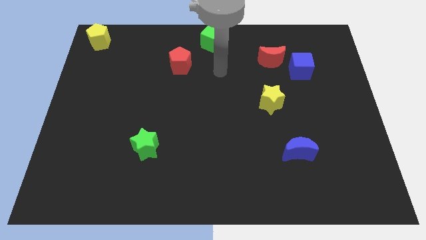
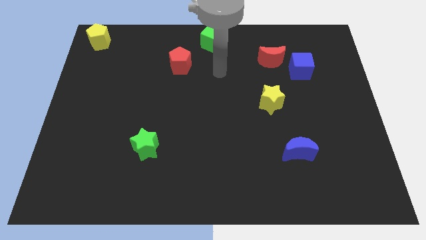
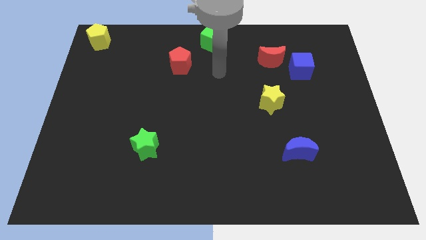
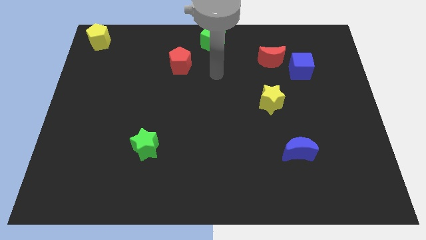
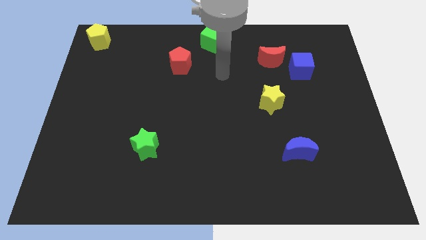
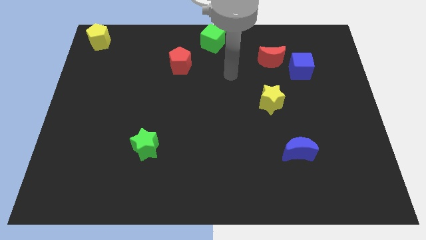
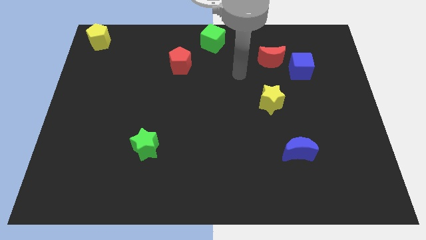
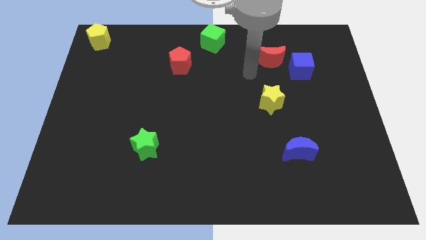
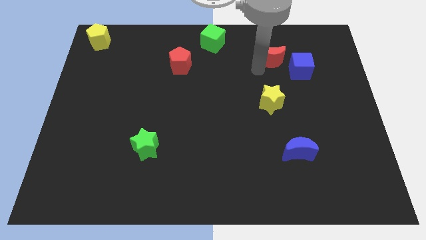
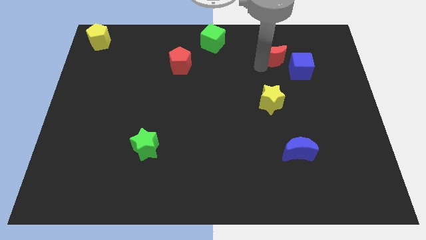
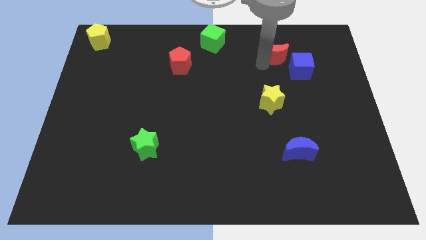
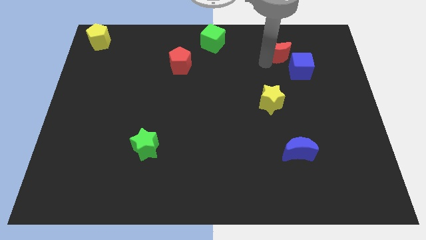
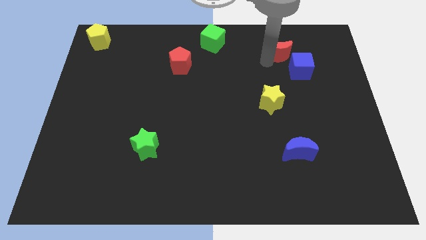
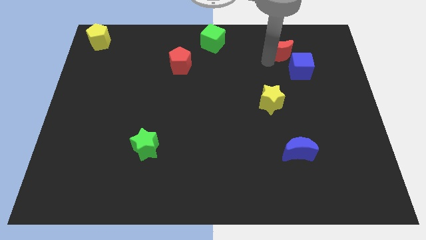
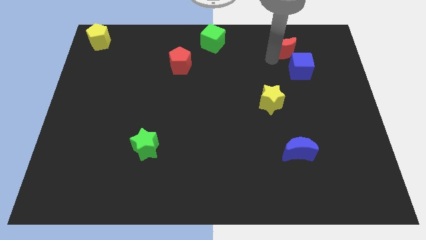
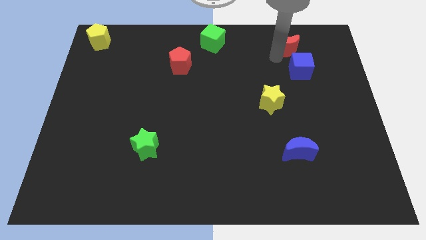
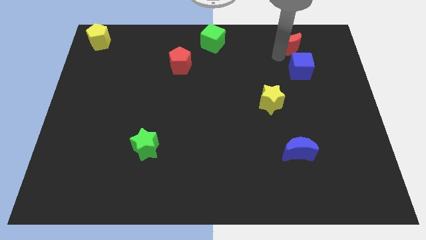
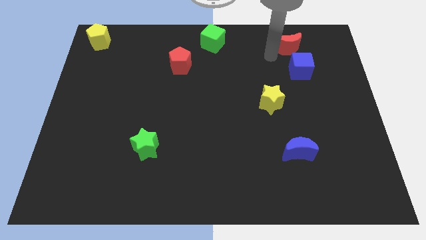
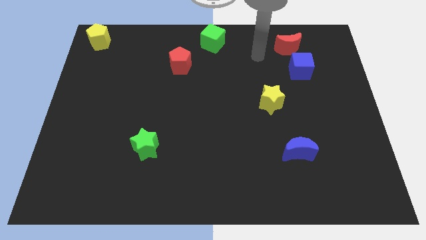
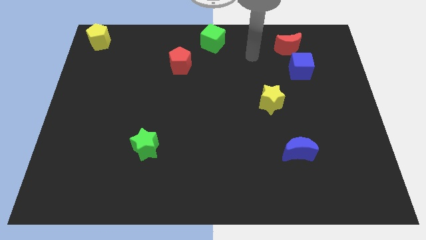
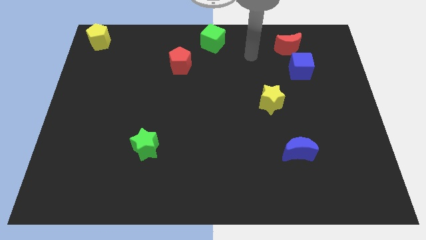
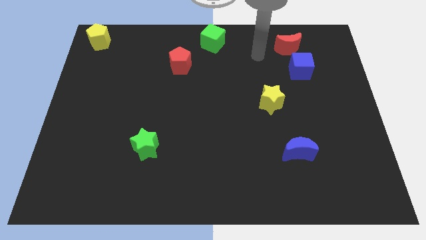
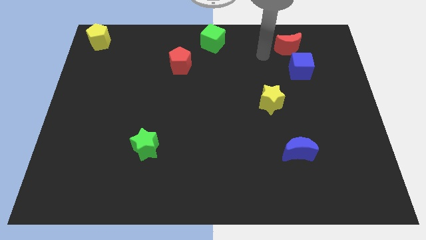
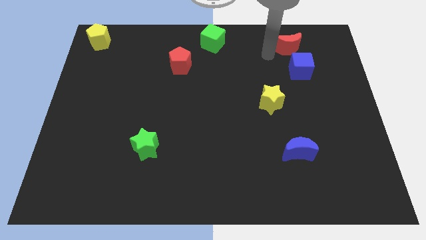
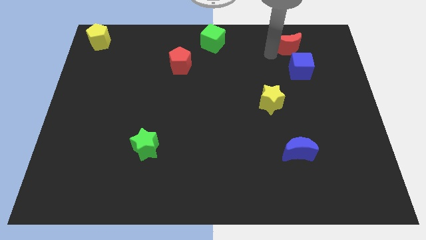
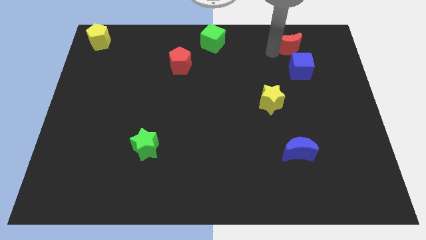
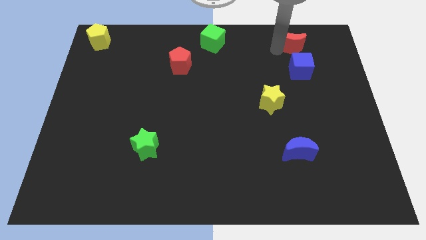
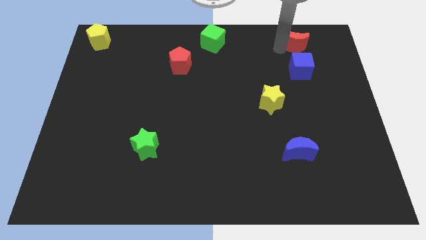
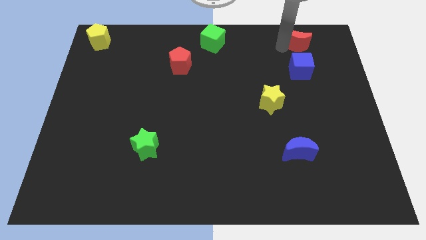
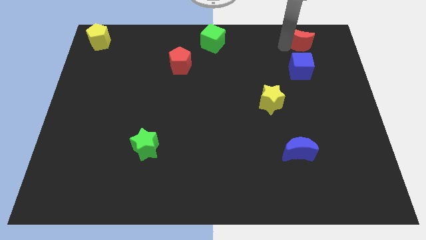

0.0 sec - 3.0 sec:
place the red crescent at top of the blue cube

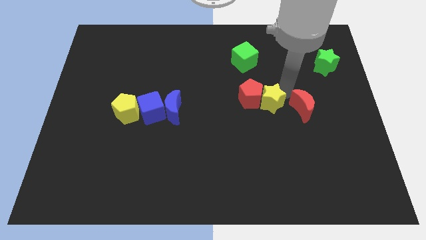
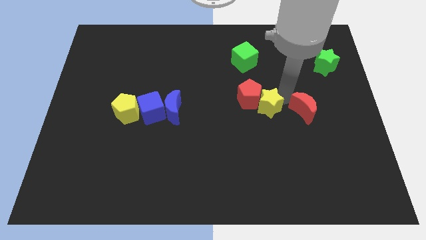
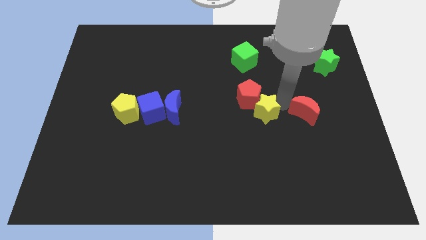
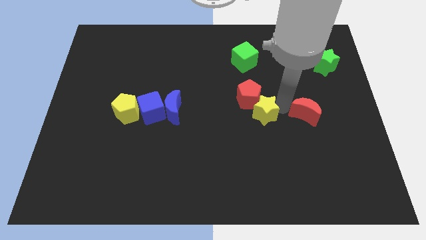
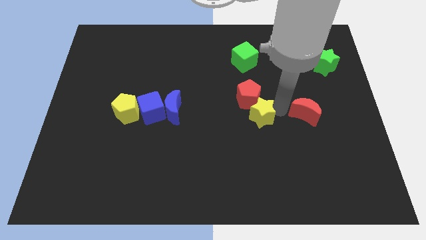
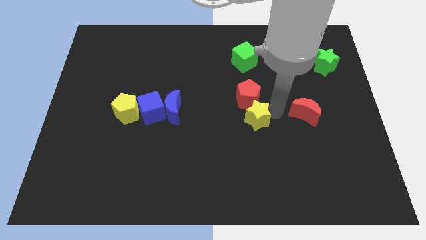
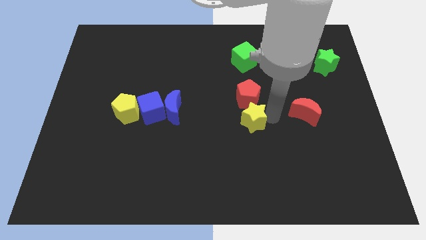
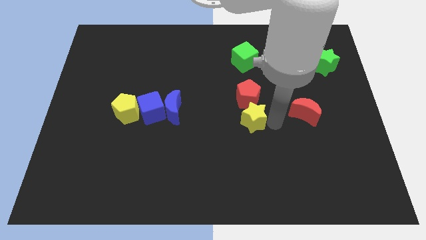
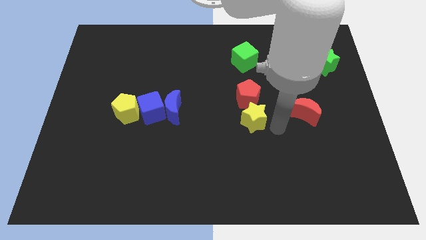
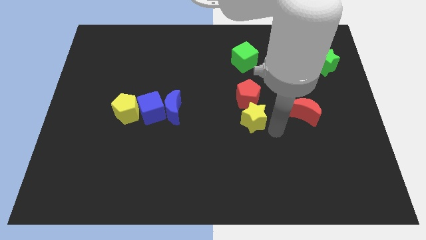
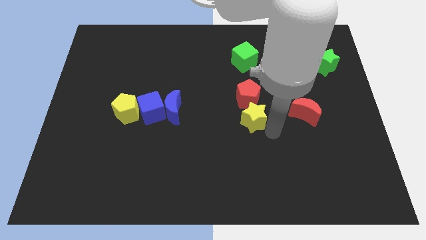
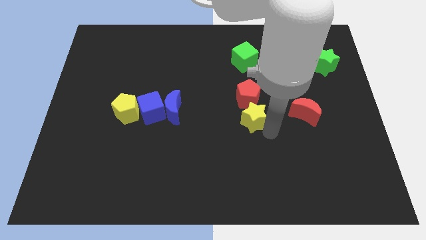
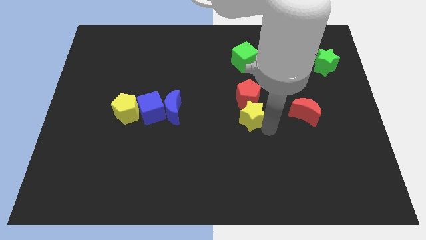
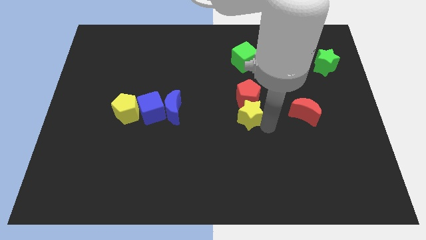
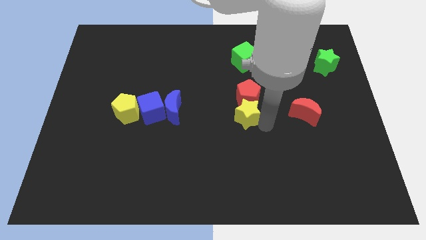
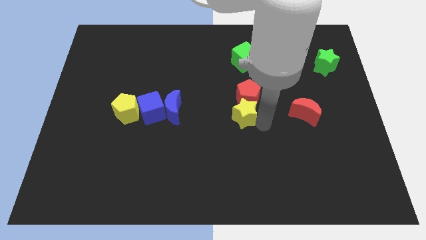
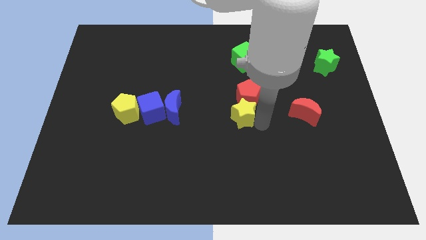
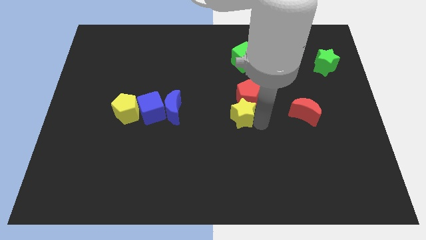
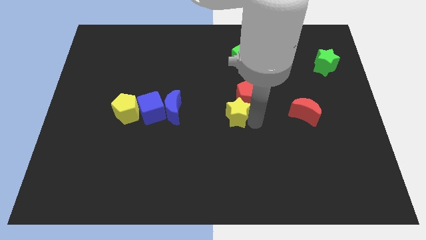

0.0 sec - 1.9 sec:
place the yellow star below the red pentagon

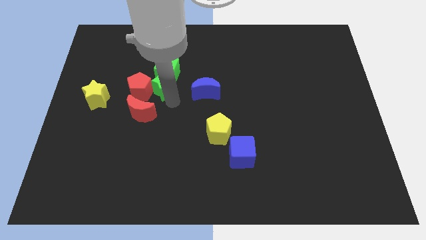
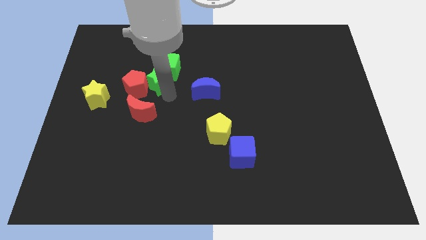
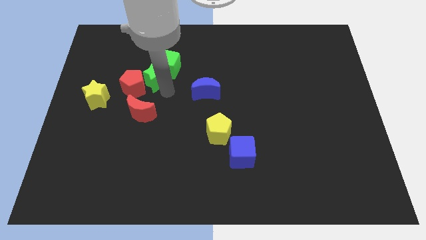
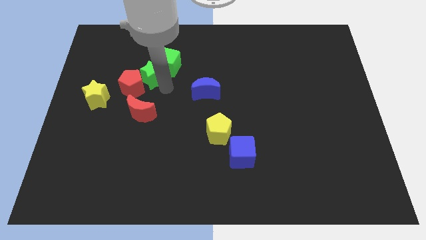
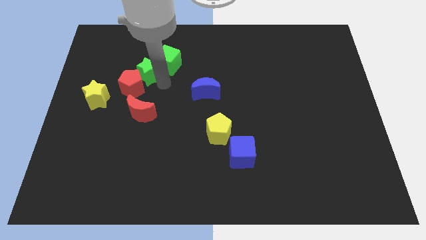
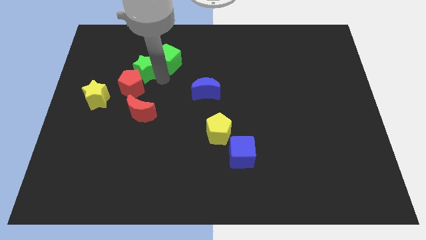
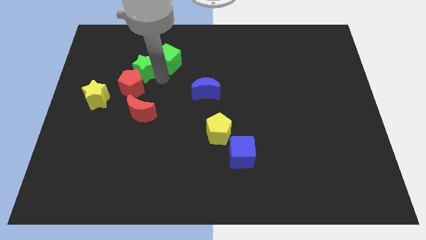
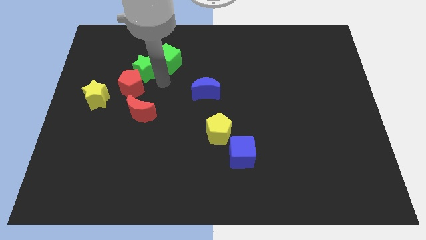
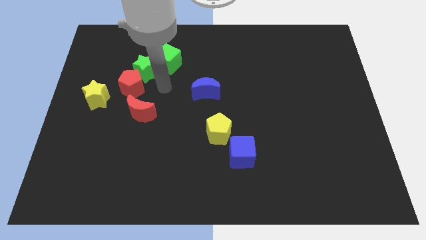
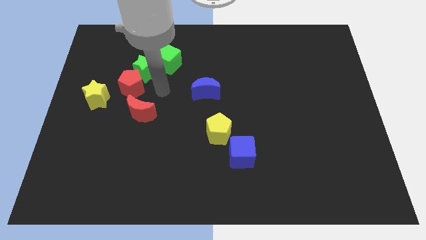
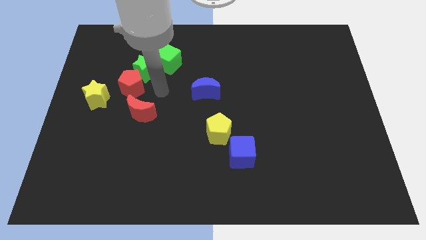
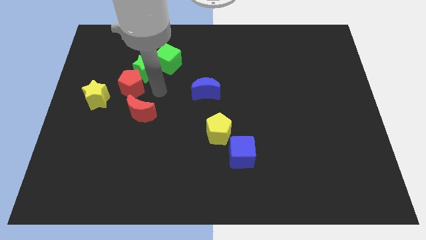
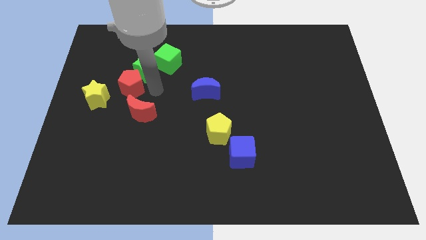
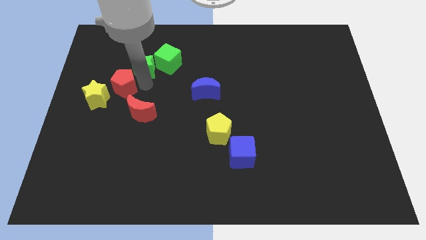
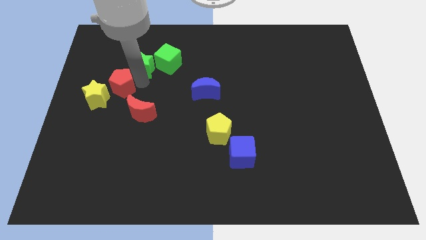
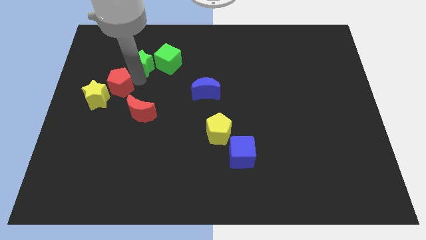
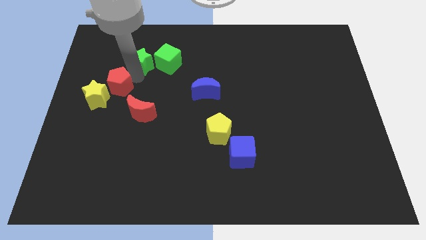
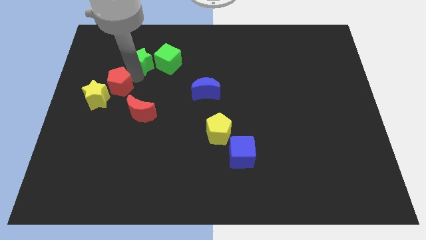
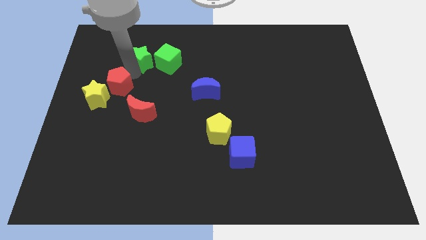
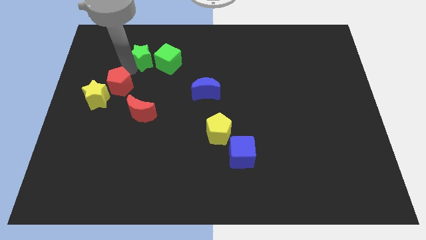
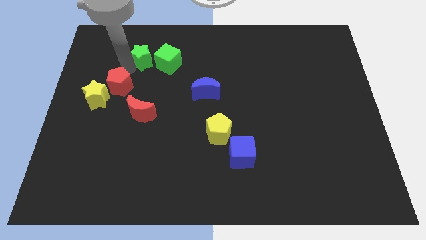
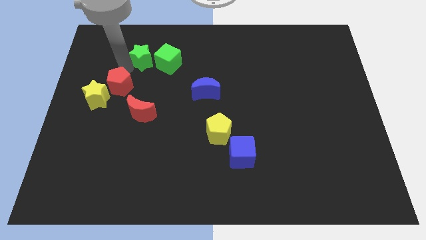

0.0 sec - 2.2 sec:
move the green star to the left of the green cube

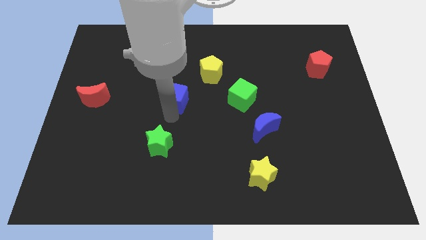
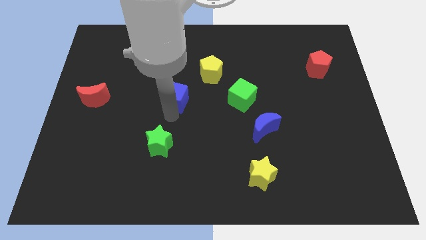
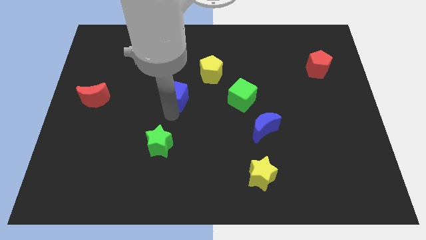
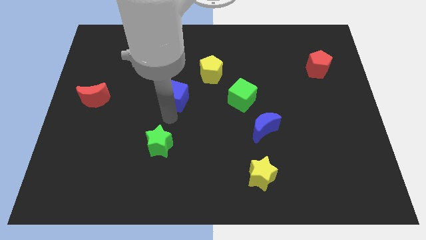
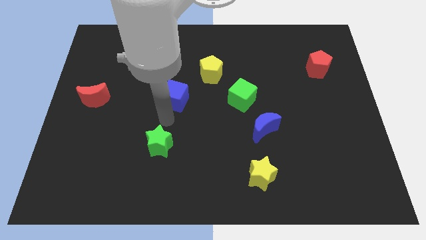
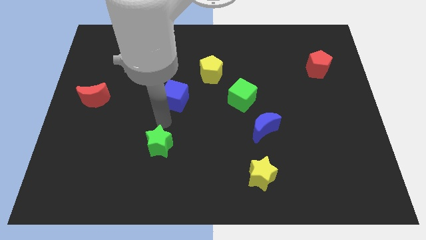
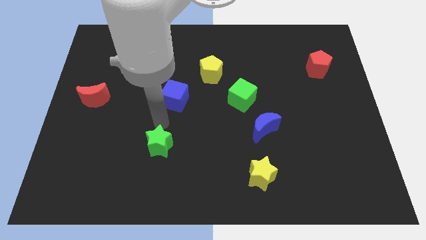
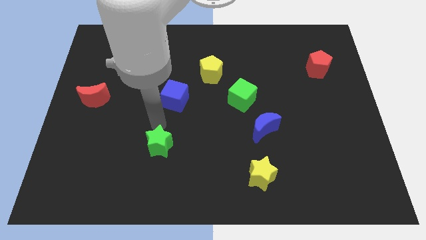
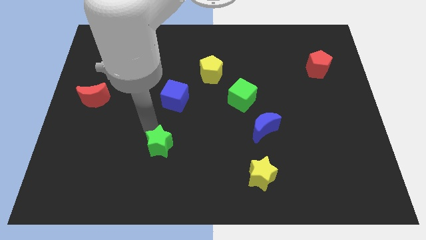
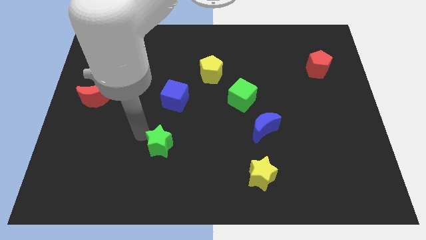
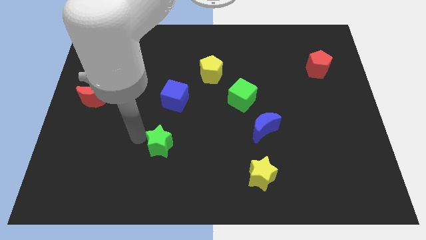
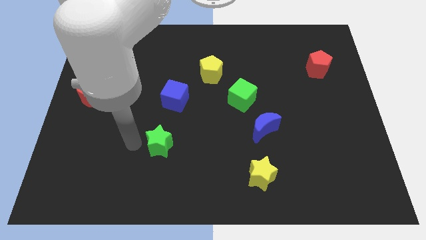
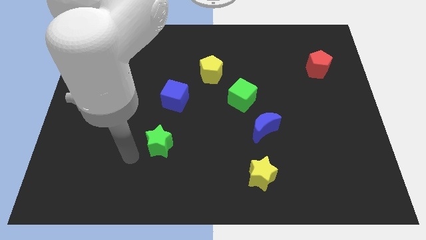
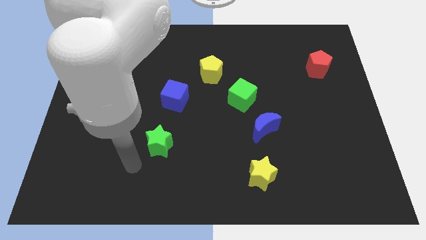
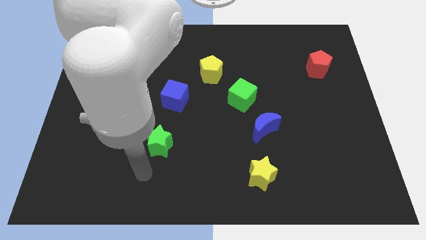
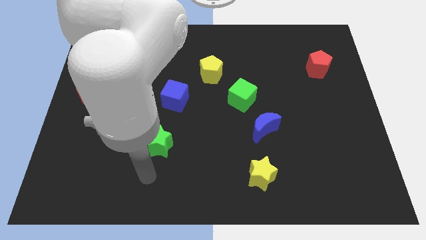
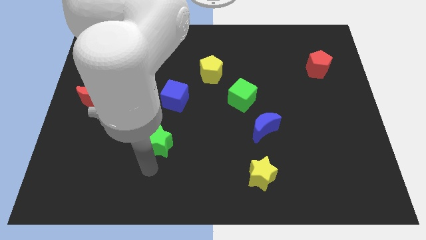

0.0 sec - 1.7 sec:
place the arm at the bottom of the green star
